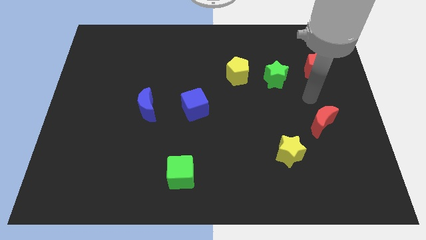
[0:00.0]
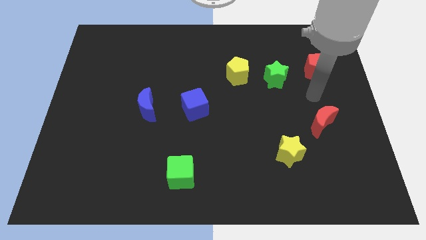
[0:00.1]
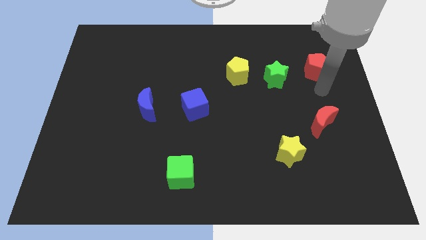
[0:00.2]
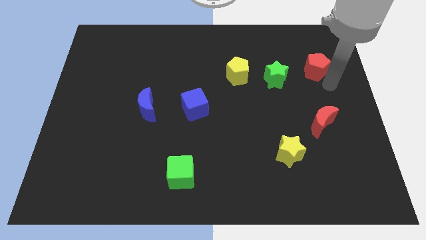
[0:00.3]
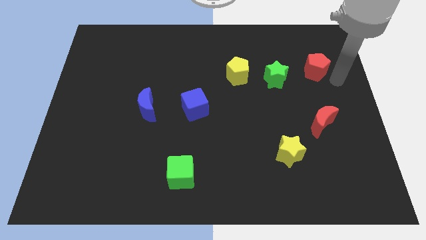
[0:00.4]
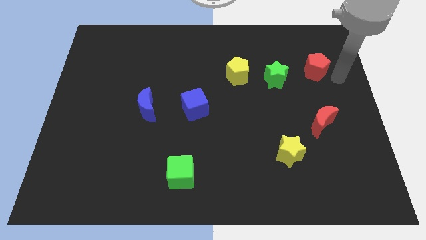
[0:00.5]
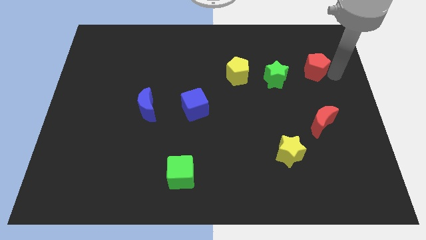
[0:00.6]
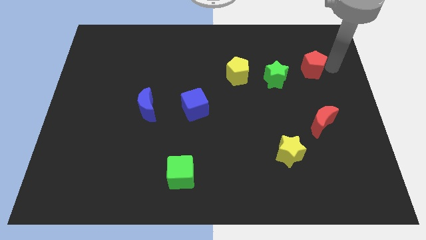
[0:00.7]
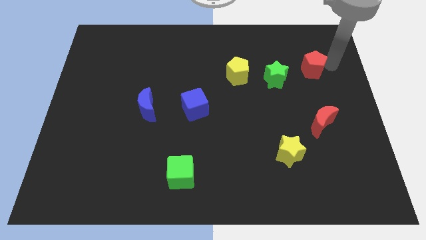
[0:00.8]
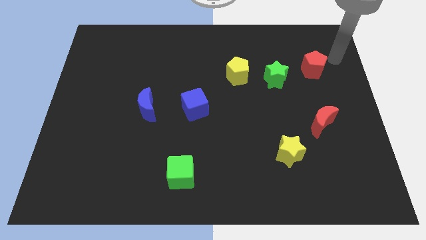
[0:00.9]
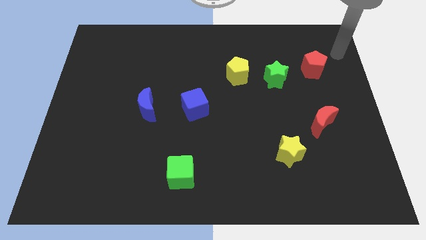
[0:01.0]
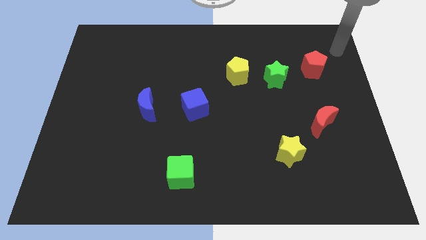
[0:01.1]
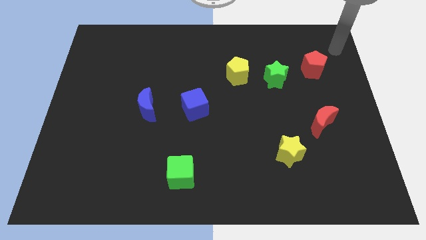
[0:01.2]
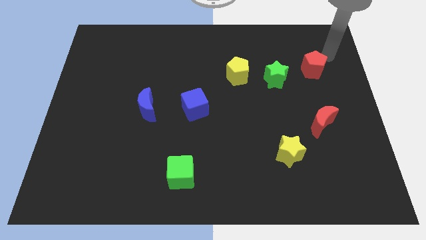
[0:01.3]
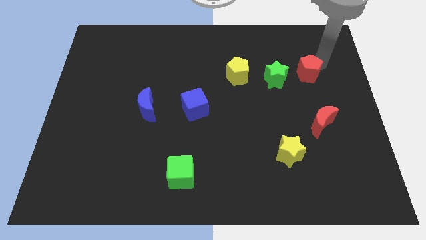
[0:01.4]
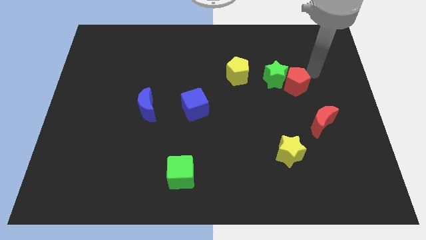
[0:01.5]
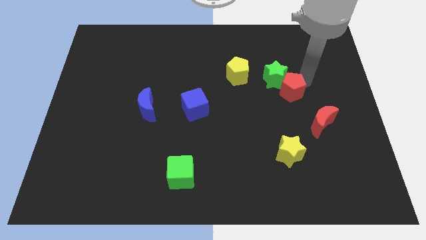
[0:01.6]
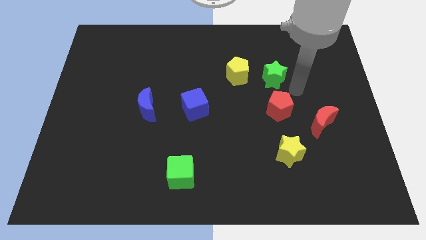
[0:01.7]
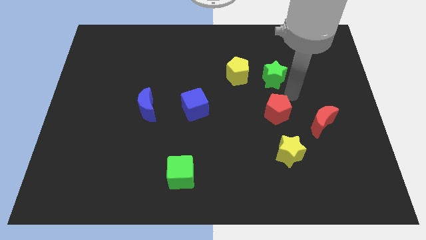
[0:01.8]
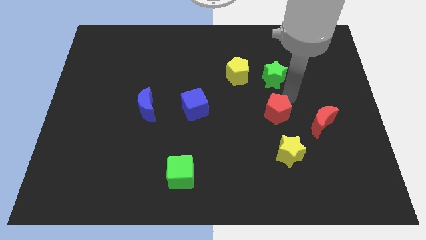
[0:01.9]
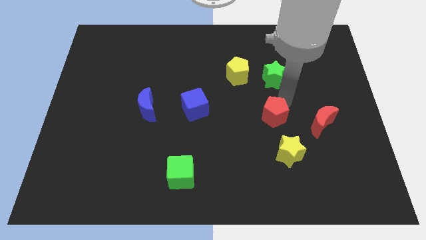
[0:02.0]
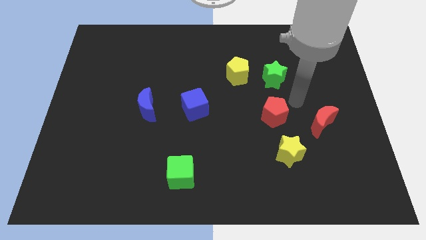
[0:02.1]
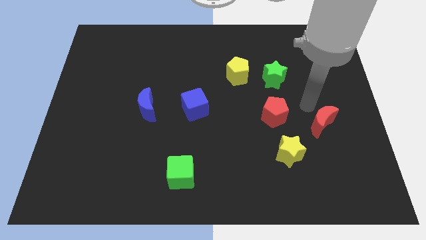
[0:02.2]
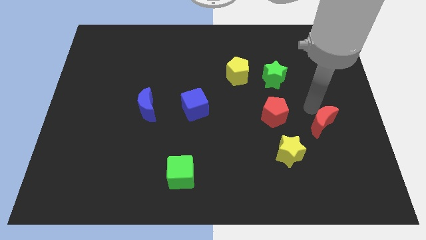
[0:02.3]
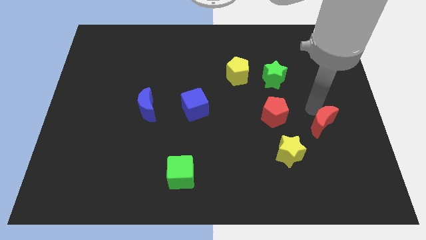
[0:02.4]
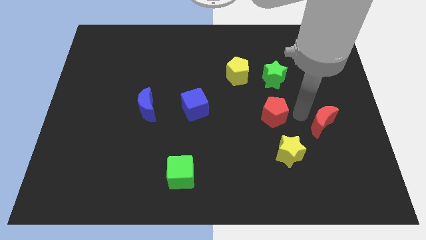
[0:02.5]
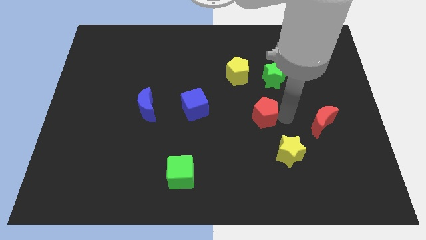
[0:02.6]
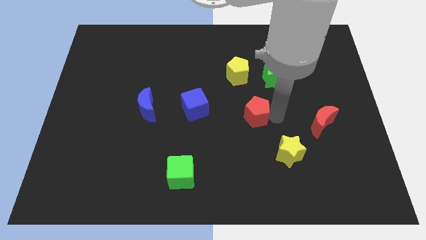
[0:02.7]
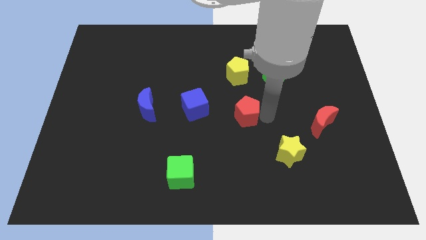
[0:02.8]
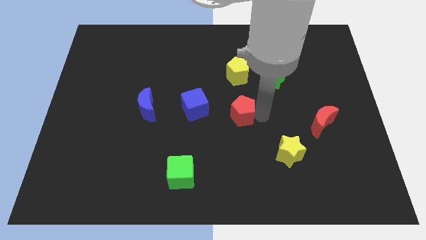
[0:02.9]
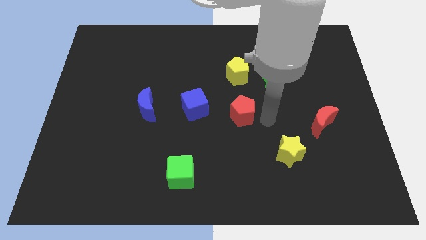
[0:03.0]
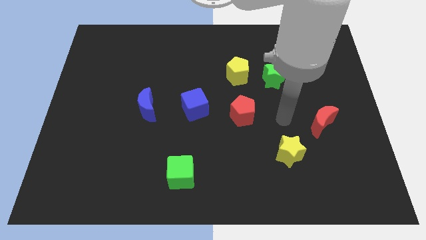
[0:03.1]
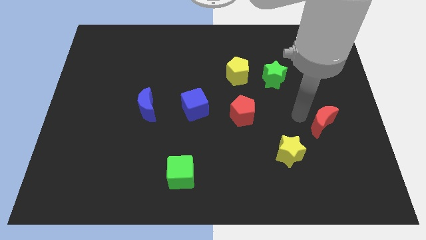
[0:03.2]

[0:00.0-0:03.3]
move the red pentagon to the center of the board

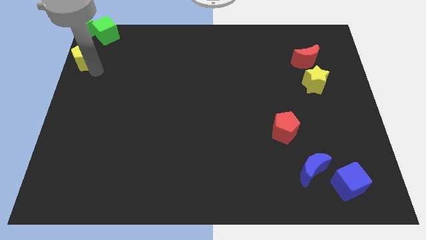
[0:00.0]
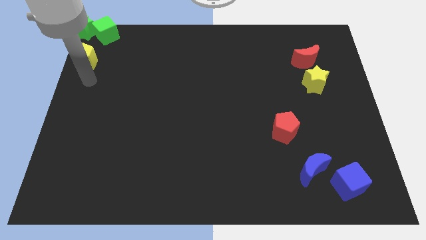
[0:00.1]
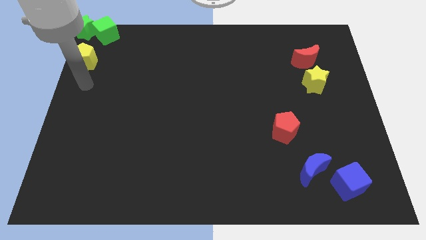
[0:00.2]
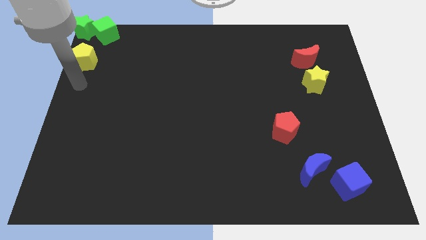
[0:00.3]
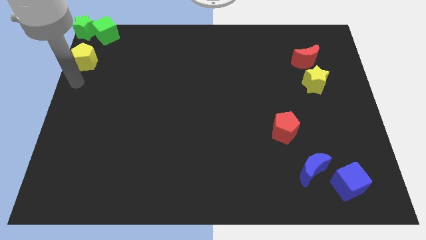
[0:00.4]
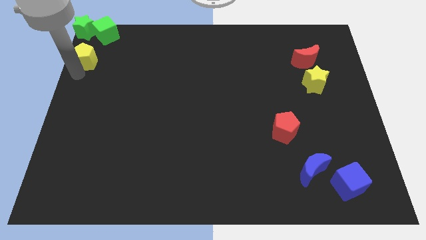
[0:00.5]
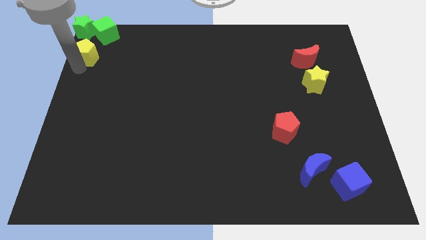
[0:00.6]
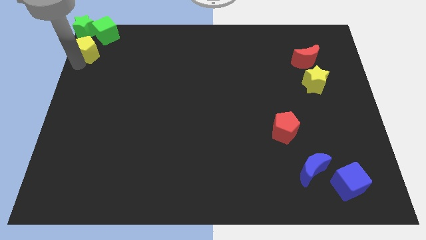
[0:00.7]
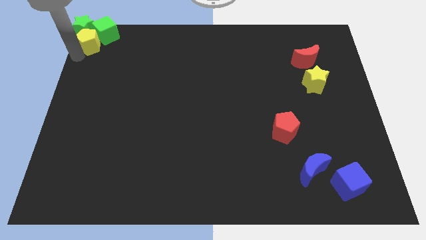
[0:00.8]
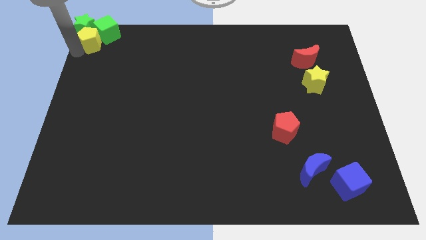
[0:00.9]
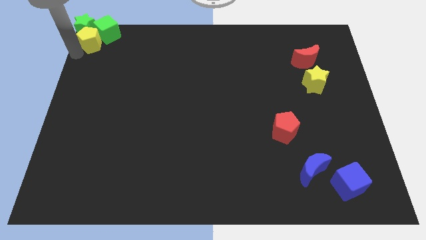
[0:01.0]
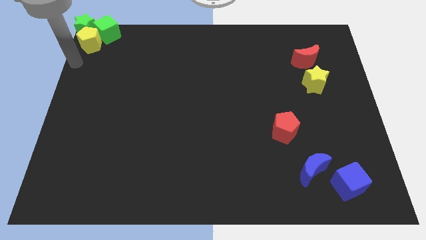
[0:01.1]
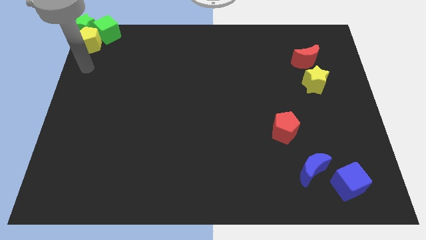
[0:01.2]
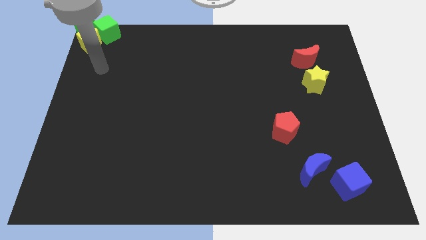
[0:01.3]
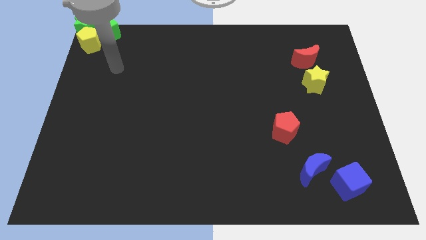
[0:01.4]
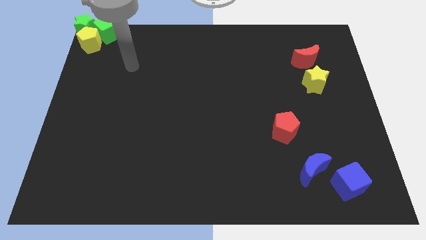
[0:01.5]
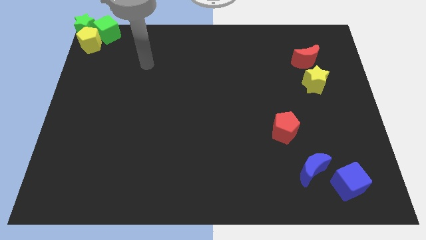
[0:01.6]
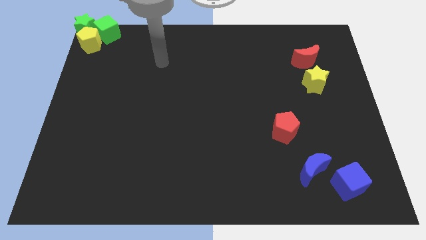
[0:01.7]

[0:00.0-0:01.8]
push the yellow pentagon into the green blocks

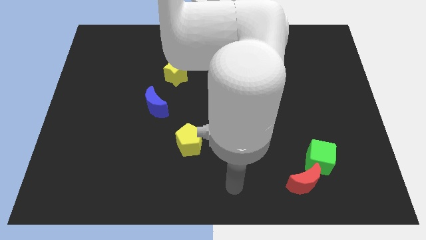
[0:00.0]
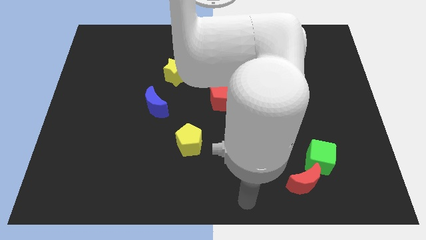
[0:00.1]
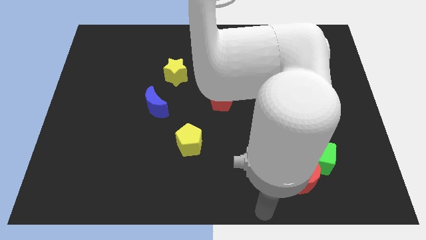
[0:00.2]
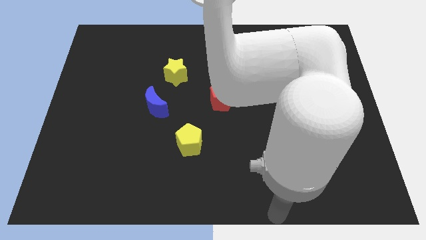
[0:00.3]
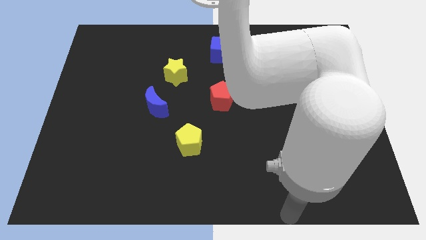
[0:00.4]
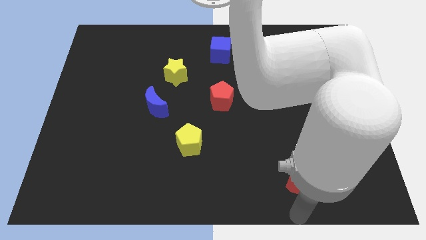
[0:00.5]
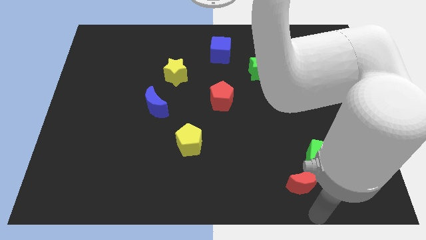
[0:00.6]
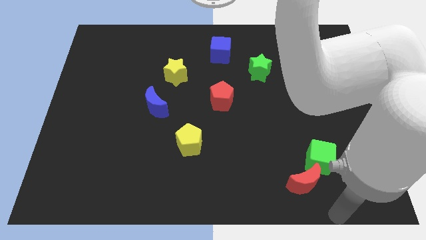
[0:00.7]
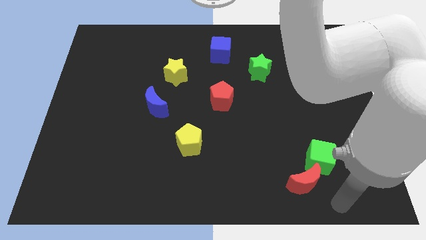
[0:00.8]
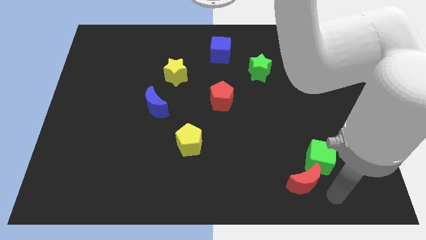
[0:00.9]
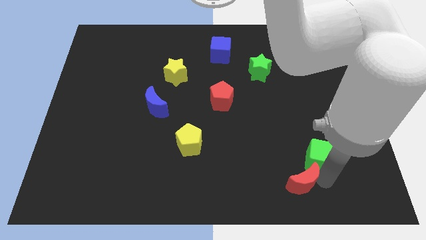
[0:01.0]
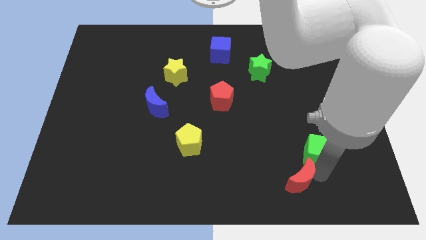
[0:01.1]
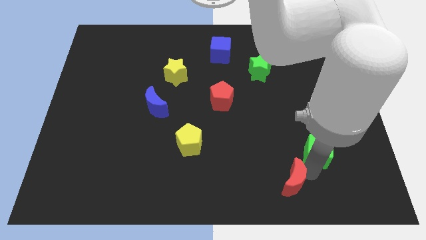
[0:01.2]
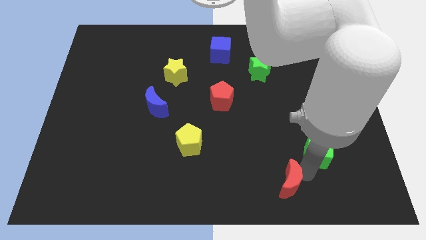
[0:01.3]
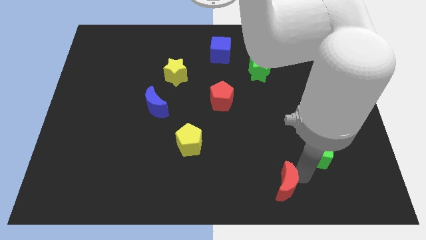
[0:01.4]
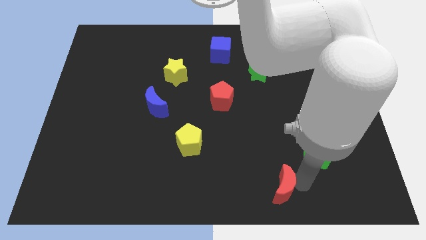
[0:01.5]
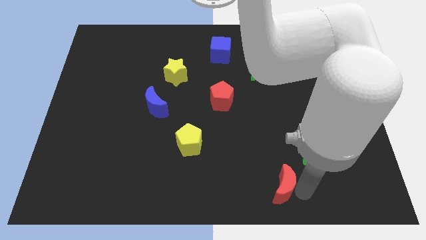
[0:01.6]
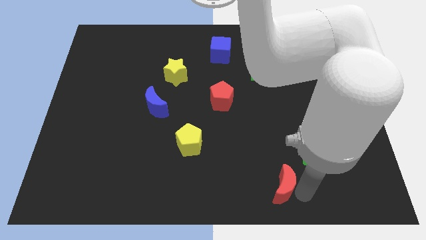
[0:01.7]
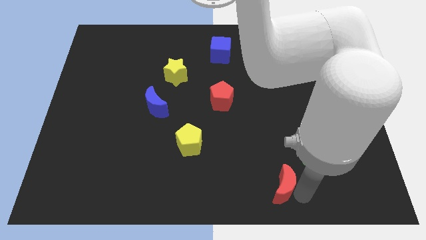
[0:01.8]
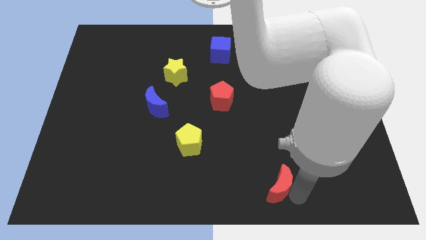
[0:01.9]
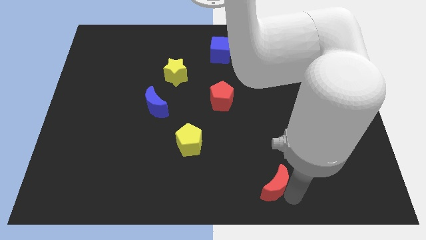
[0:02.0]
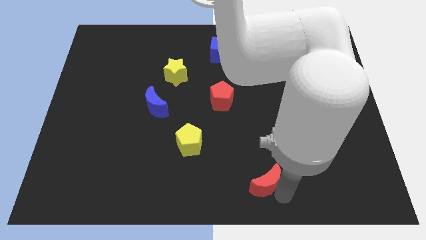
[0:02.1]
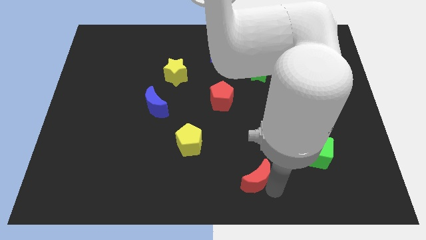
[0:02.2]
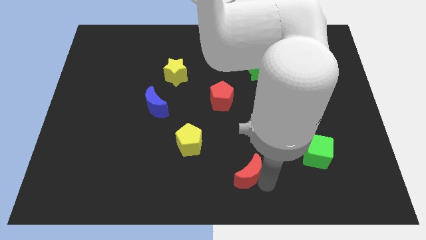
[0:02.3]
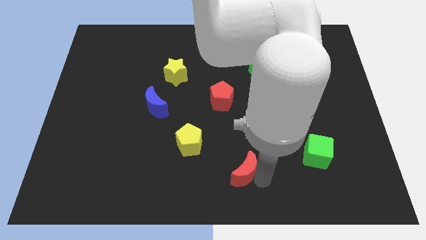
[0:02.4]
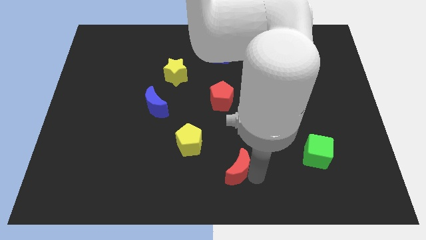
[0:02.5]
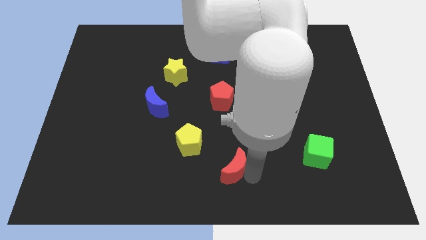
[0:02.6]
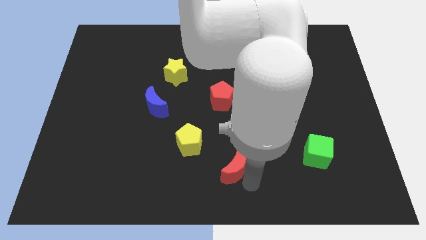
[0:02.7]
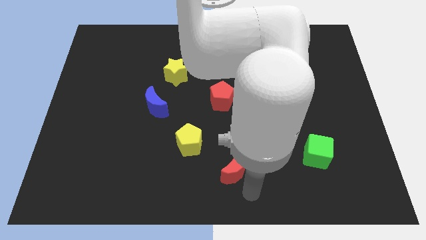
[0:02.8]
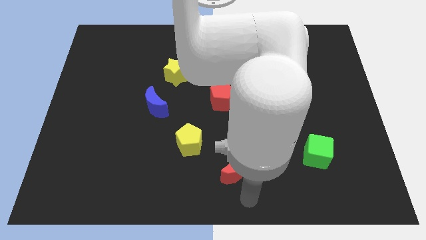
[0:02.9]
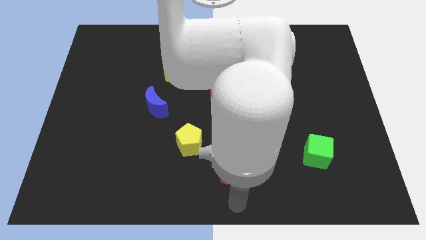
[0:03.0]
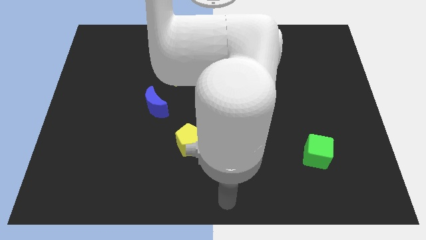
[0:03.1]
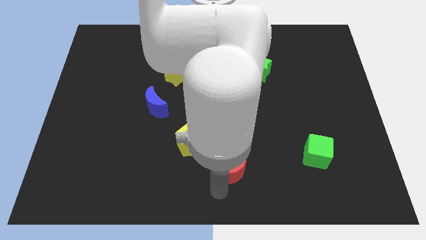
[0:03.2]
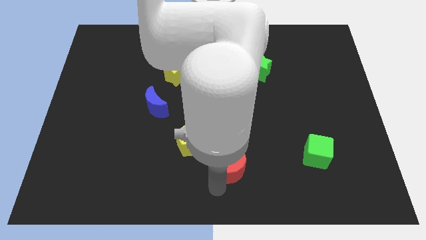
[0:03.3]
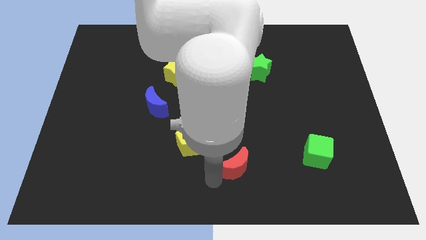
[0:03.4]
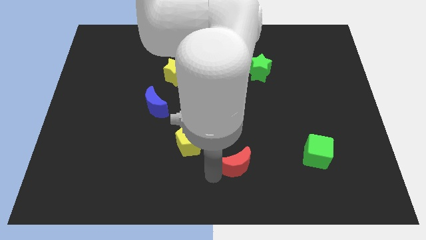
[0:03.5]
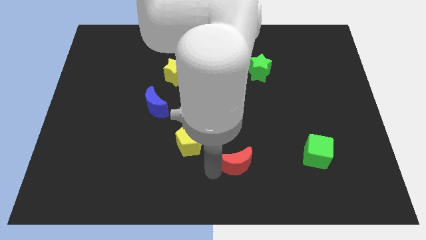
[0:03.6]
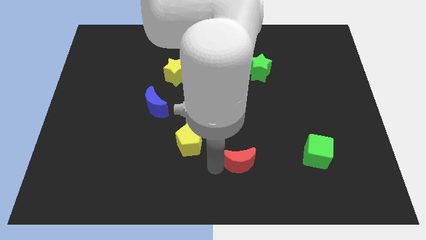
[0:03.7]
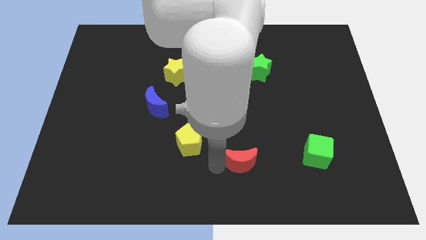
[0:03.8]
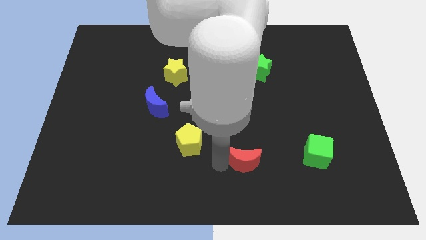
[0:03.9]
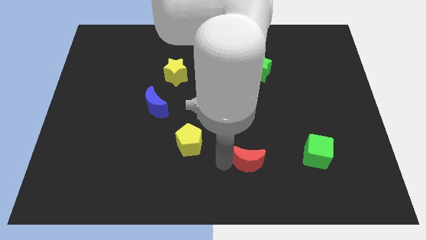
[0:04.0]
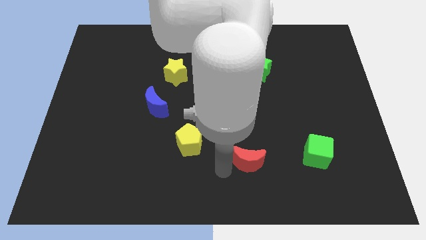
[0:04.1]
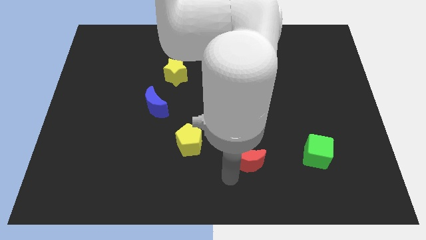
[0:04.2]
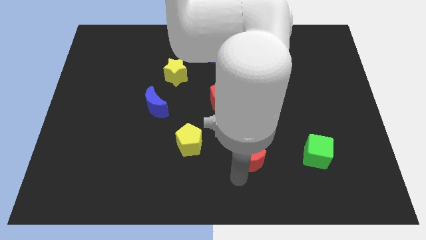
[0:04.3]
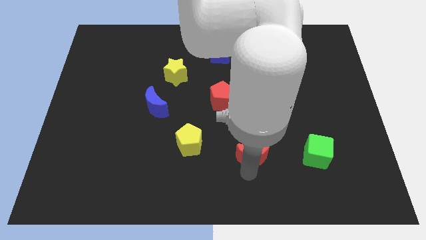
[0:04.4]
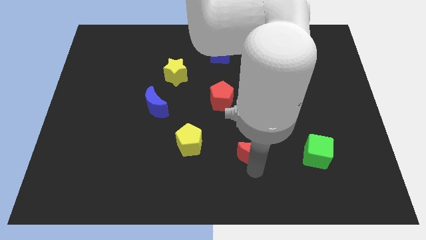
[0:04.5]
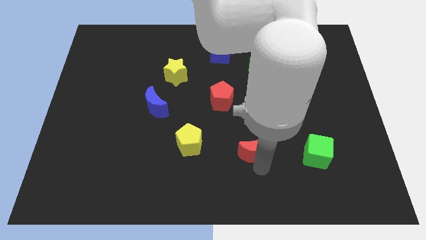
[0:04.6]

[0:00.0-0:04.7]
place the red crescent in between the green cube and the yellow pentagon
